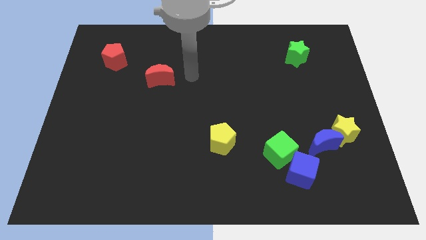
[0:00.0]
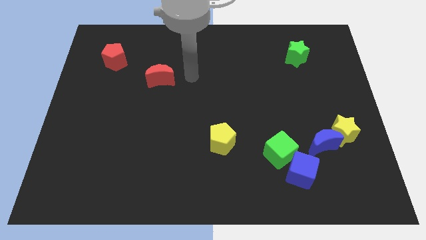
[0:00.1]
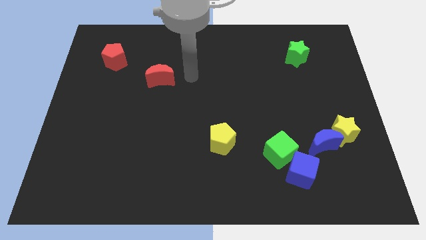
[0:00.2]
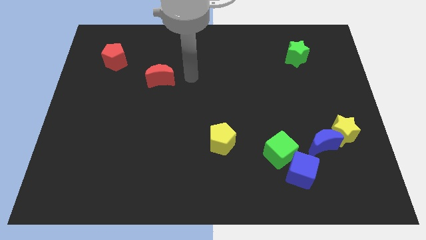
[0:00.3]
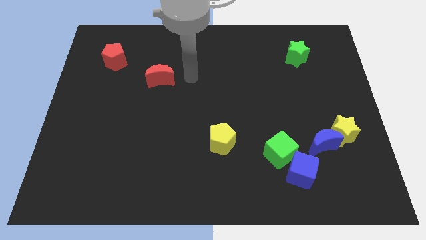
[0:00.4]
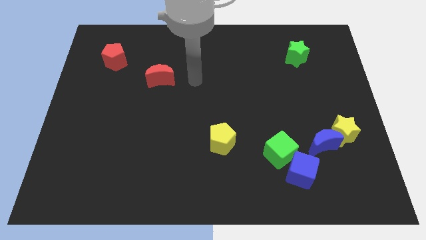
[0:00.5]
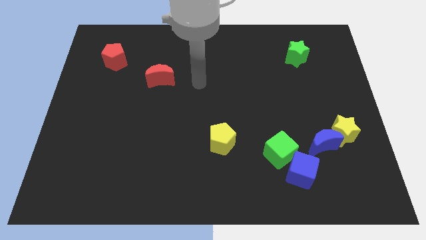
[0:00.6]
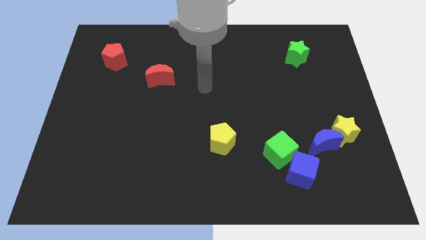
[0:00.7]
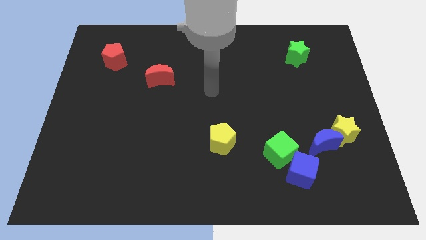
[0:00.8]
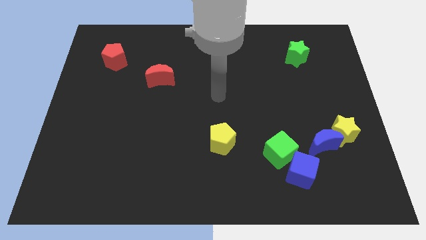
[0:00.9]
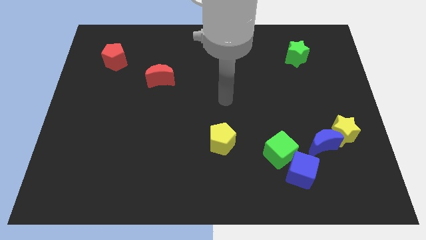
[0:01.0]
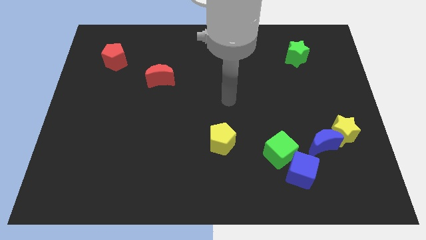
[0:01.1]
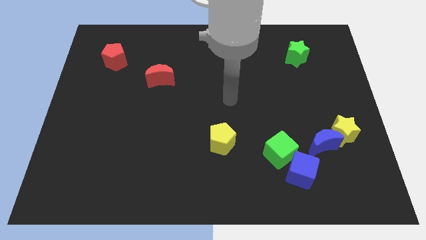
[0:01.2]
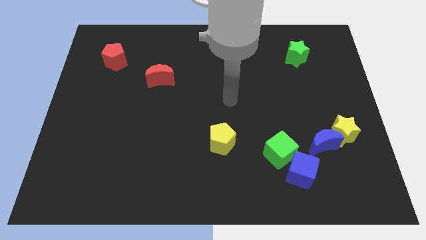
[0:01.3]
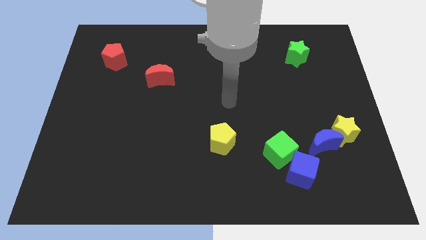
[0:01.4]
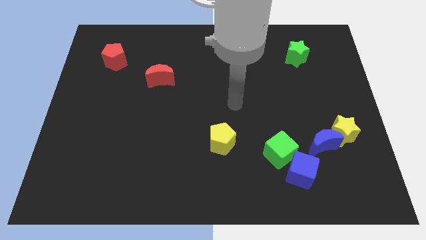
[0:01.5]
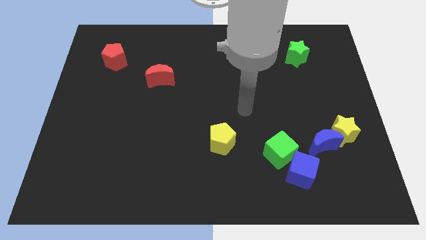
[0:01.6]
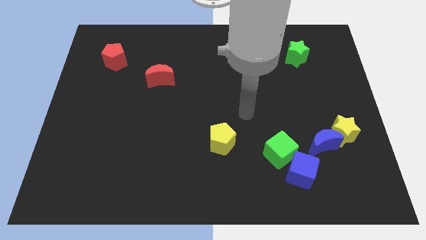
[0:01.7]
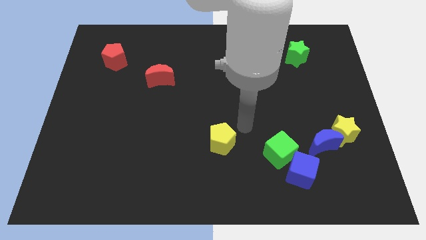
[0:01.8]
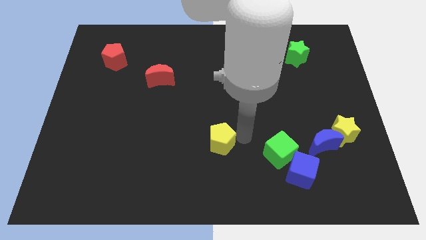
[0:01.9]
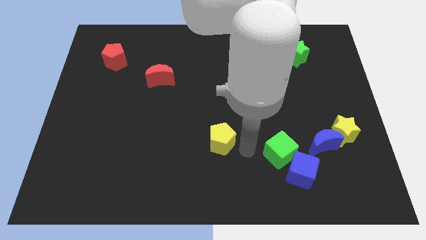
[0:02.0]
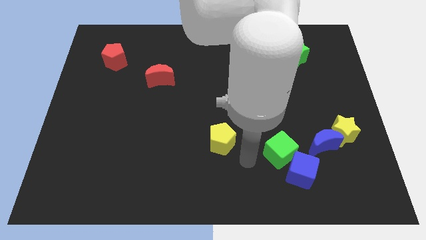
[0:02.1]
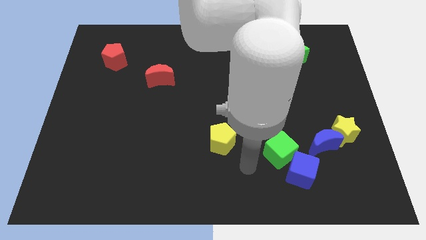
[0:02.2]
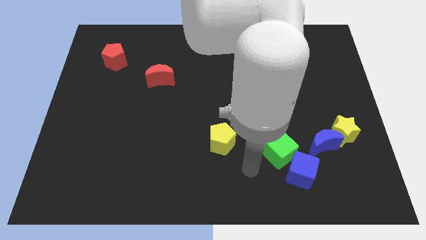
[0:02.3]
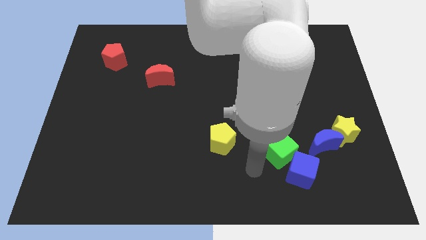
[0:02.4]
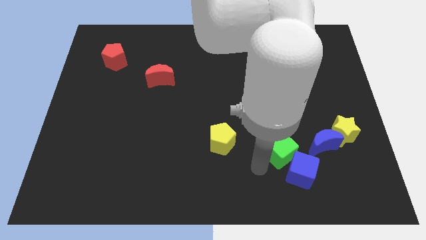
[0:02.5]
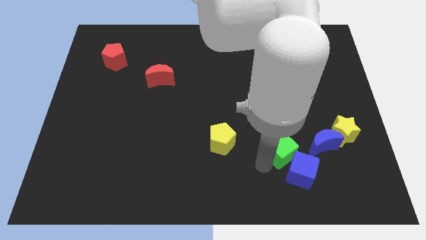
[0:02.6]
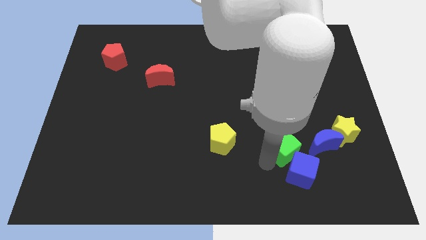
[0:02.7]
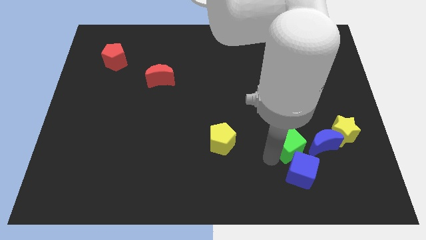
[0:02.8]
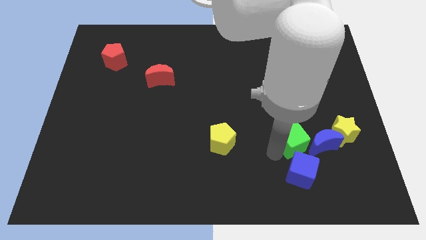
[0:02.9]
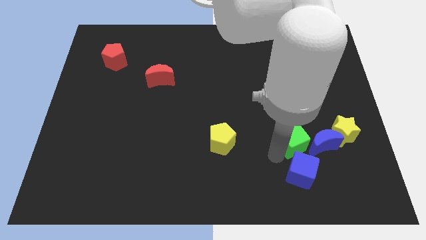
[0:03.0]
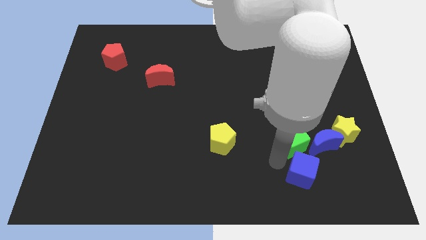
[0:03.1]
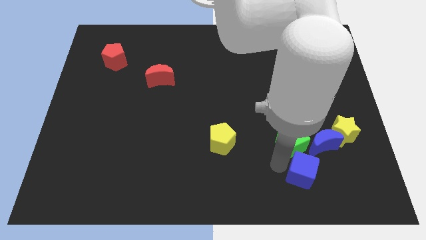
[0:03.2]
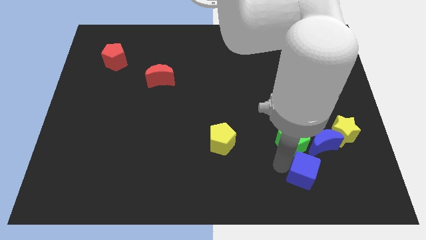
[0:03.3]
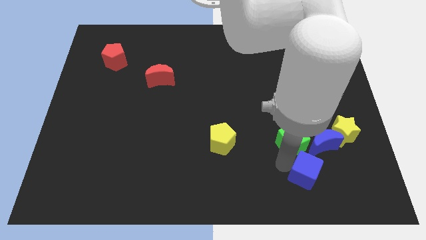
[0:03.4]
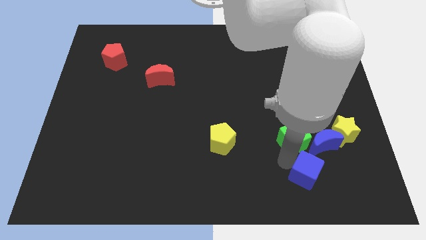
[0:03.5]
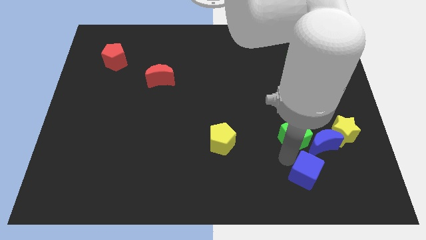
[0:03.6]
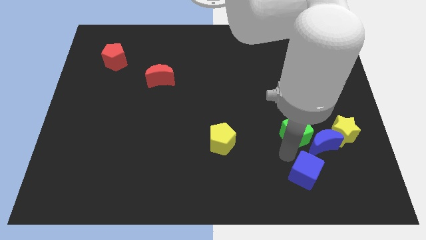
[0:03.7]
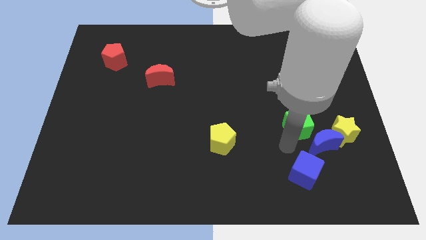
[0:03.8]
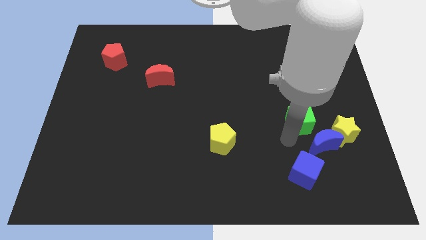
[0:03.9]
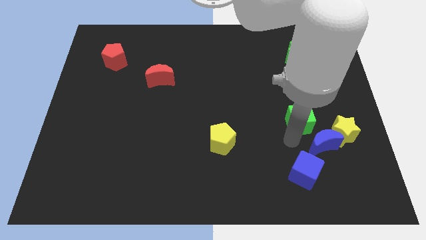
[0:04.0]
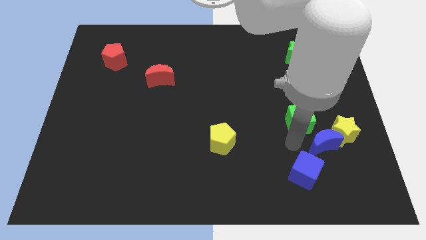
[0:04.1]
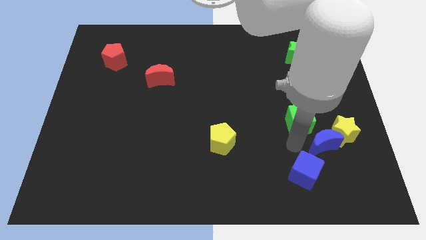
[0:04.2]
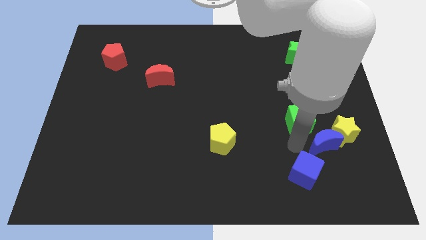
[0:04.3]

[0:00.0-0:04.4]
push the green cube upward

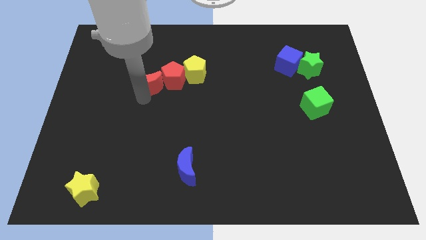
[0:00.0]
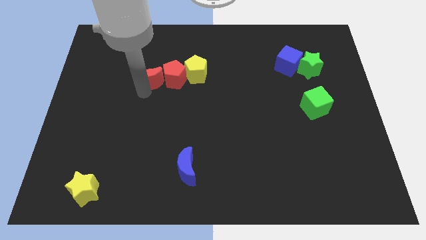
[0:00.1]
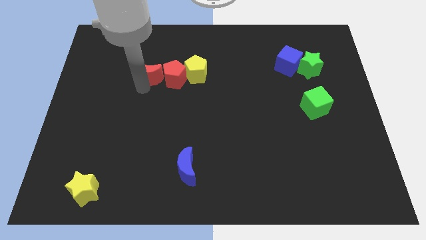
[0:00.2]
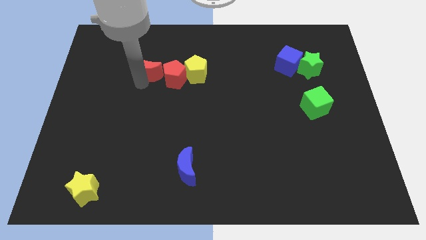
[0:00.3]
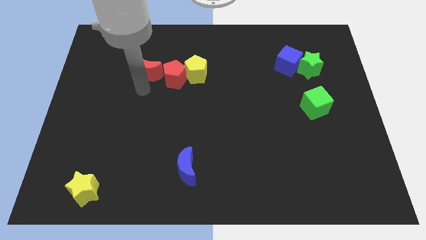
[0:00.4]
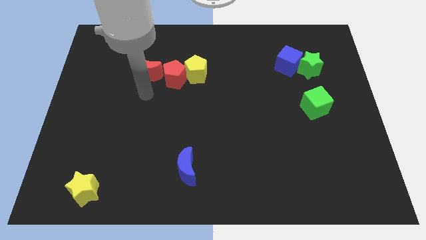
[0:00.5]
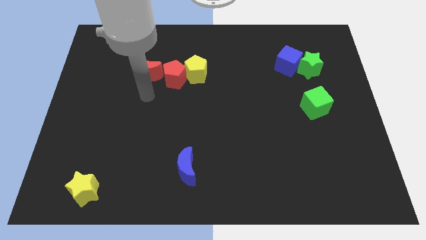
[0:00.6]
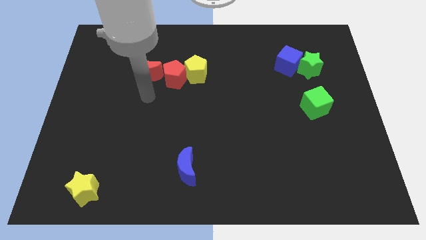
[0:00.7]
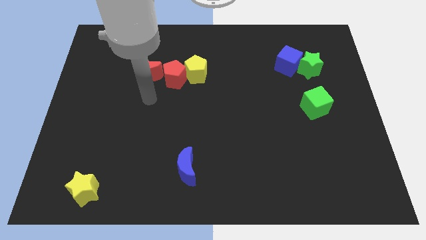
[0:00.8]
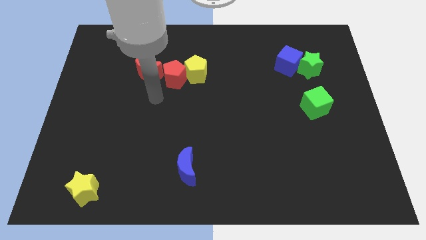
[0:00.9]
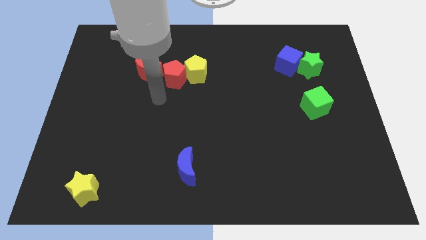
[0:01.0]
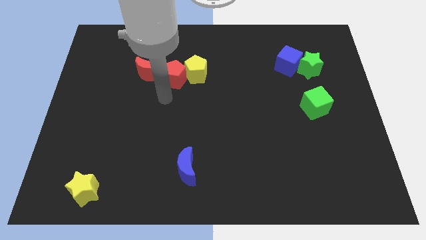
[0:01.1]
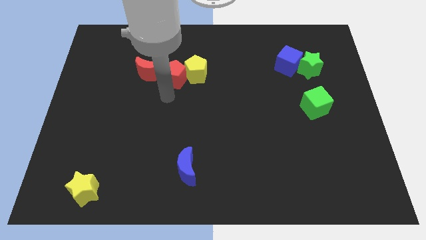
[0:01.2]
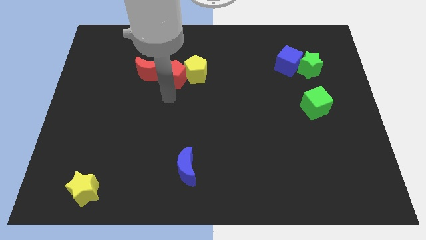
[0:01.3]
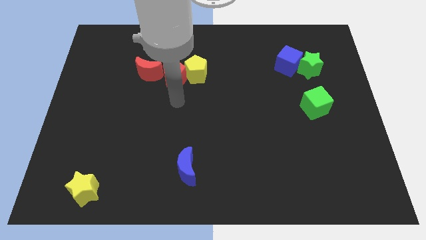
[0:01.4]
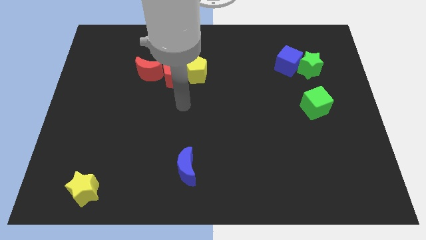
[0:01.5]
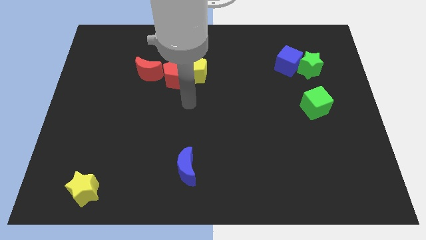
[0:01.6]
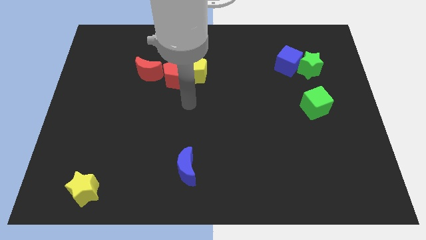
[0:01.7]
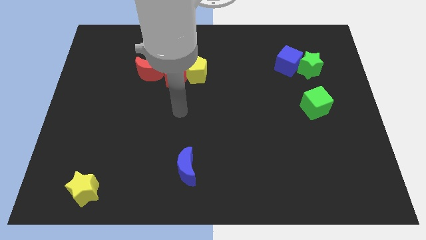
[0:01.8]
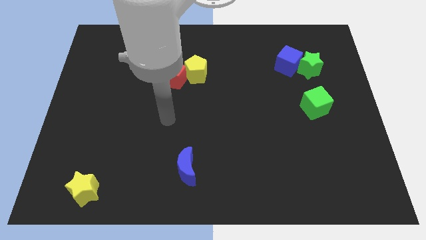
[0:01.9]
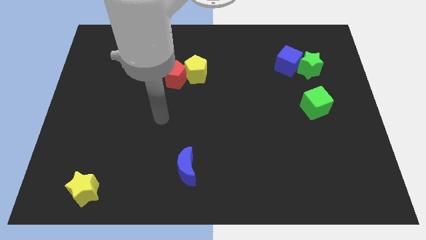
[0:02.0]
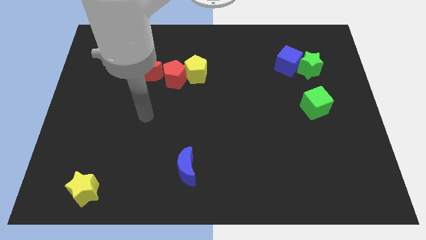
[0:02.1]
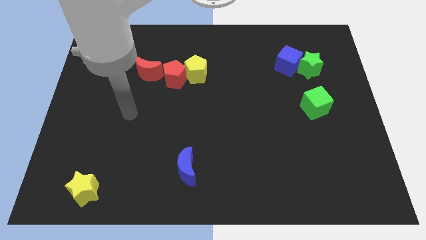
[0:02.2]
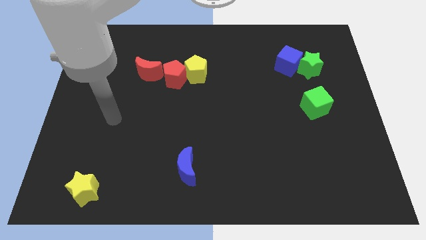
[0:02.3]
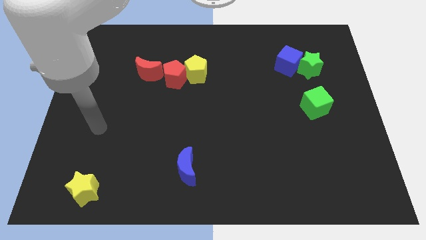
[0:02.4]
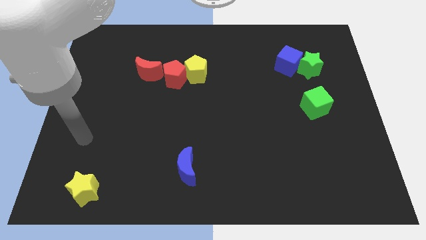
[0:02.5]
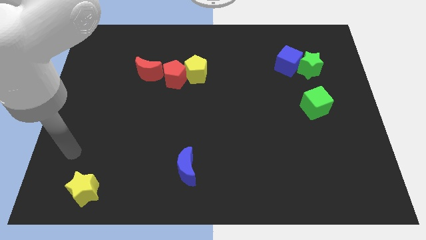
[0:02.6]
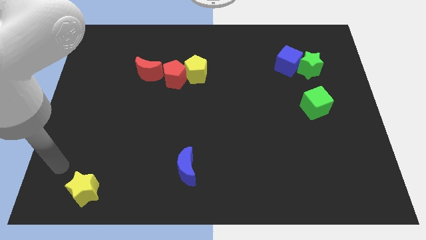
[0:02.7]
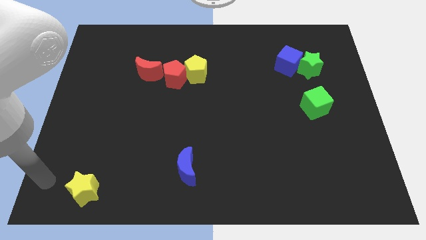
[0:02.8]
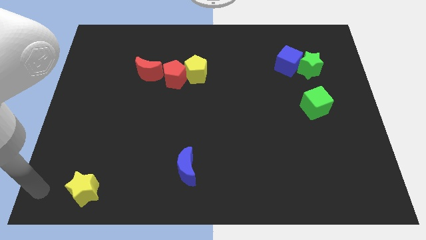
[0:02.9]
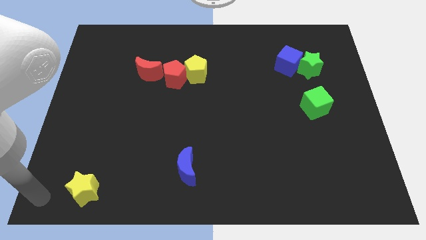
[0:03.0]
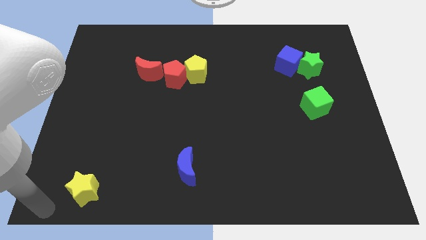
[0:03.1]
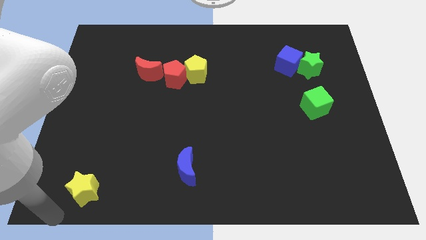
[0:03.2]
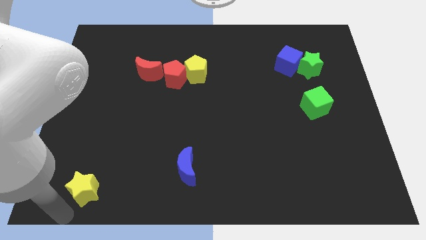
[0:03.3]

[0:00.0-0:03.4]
move the red moon slightly up

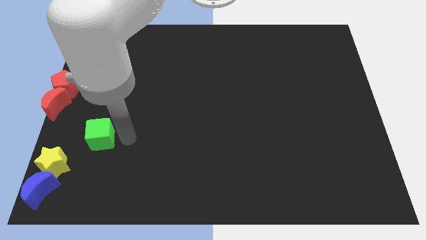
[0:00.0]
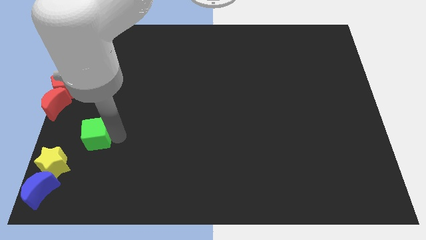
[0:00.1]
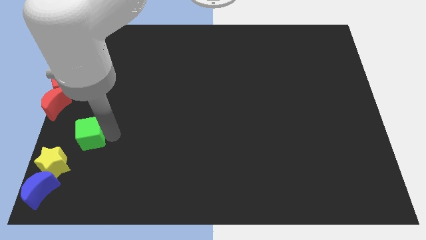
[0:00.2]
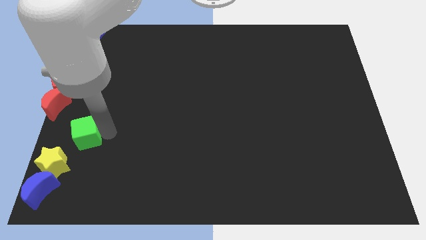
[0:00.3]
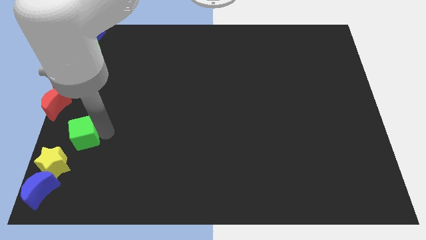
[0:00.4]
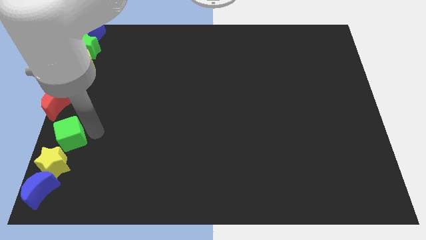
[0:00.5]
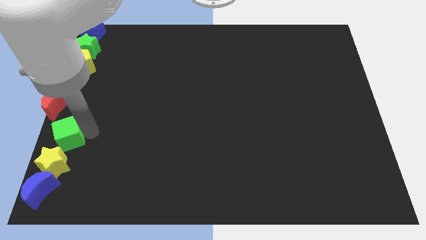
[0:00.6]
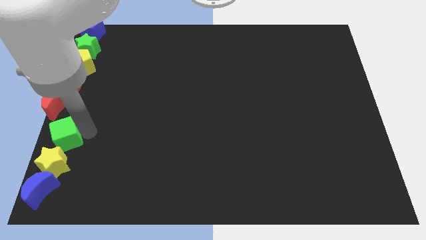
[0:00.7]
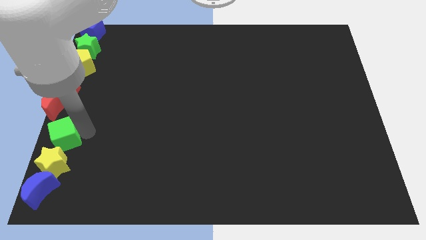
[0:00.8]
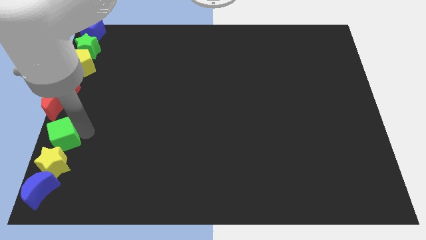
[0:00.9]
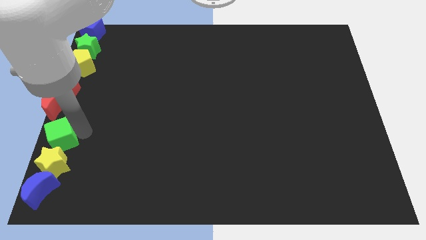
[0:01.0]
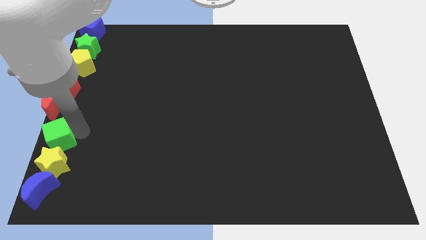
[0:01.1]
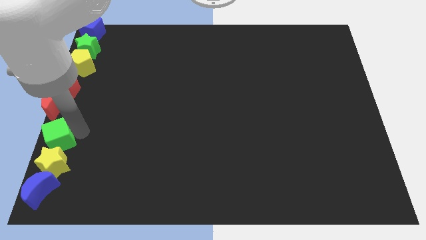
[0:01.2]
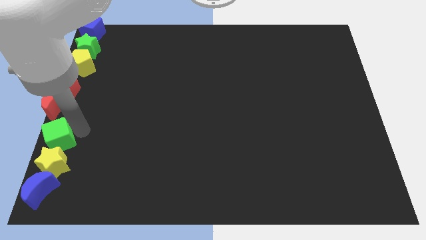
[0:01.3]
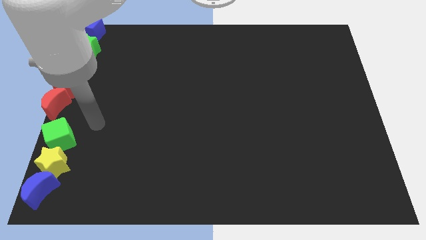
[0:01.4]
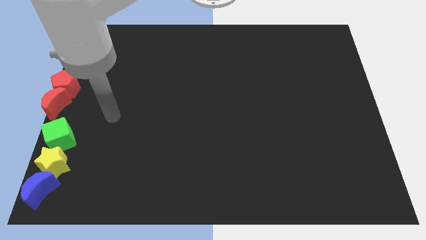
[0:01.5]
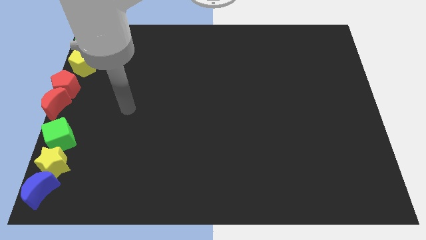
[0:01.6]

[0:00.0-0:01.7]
place the green cube above the yellow star
